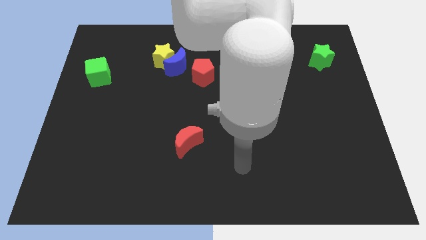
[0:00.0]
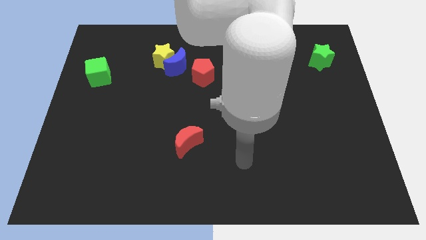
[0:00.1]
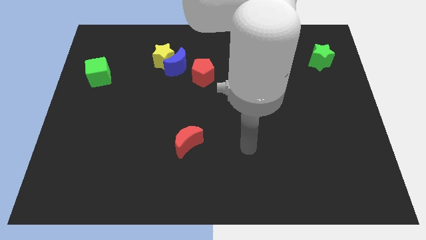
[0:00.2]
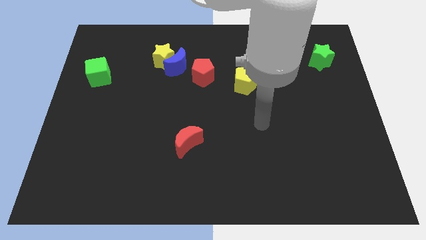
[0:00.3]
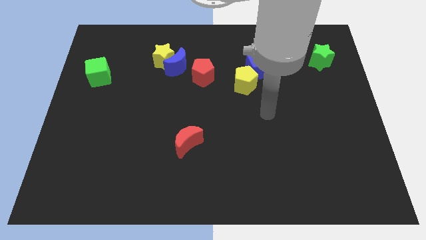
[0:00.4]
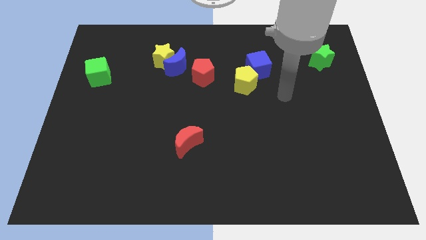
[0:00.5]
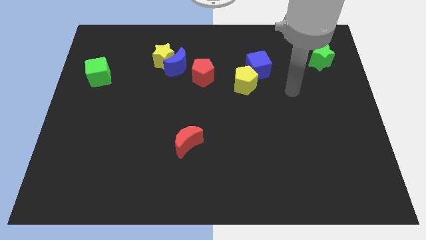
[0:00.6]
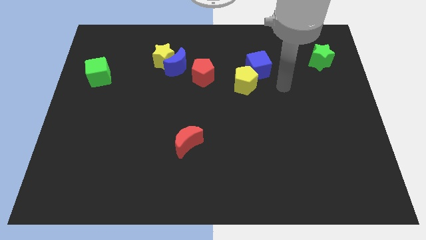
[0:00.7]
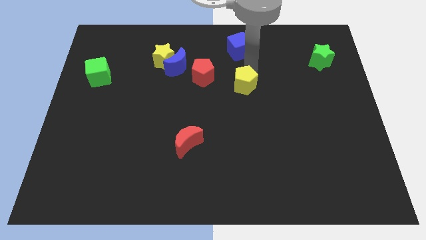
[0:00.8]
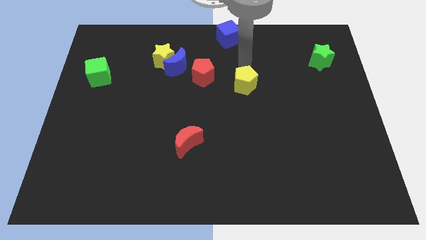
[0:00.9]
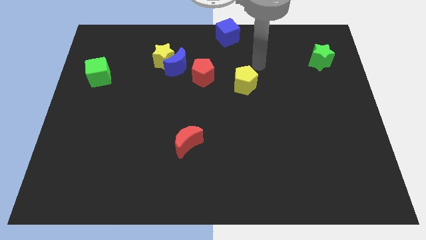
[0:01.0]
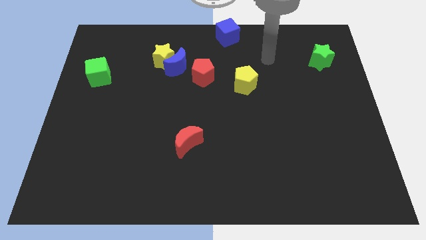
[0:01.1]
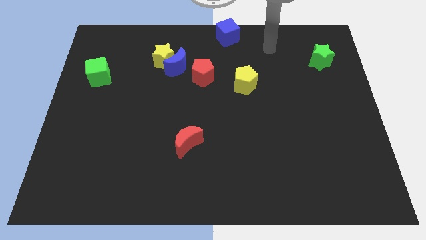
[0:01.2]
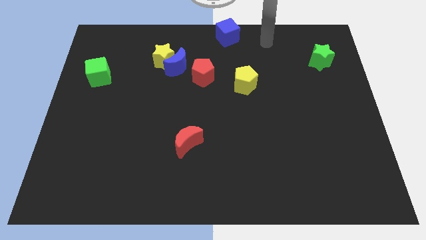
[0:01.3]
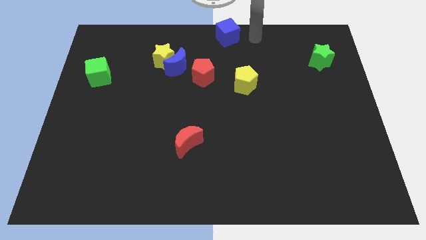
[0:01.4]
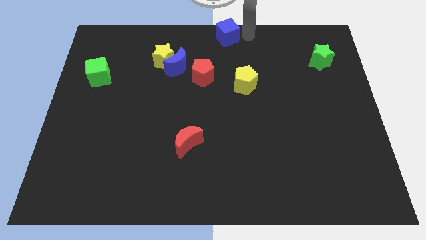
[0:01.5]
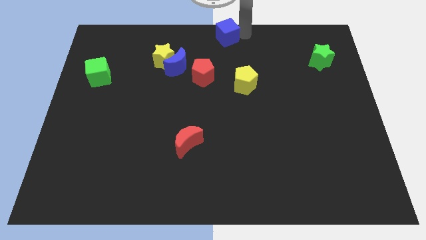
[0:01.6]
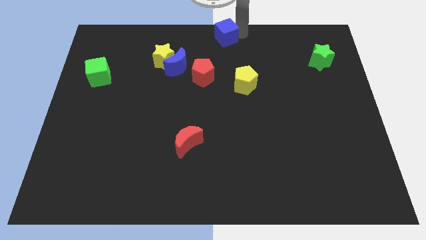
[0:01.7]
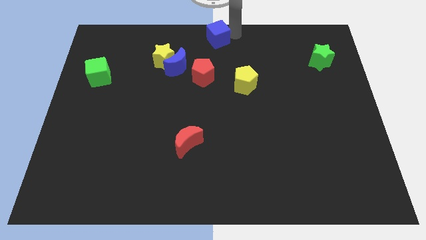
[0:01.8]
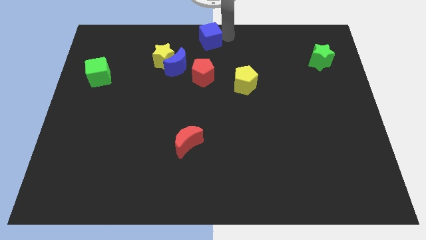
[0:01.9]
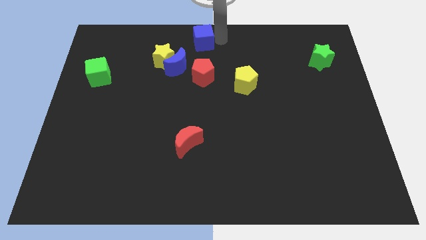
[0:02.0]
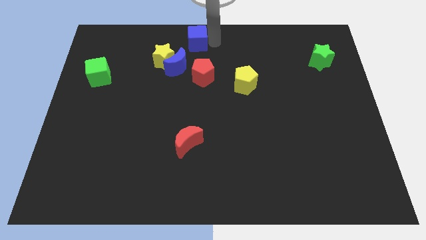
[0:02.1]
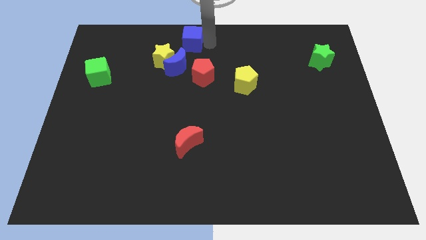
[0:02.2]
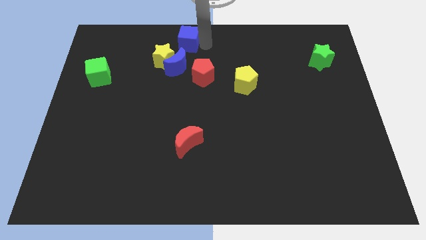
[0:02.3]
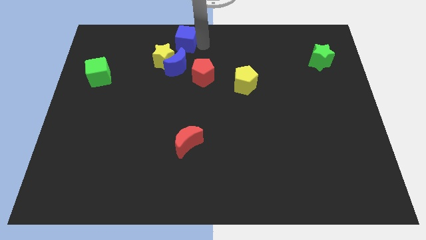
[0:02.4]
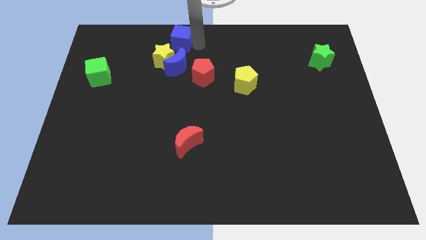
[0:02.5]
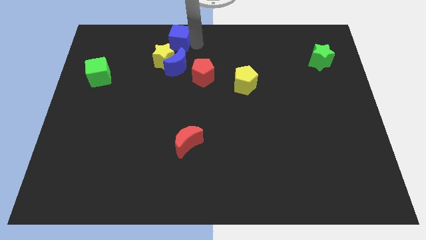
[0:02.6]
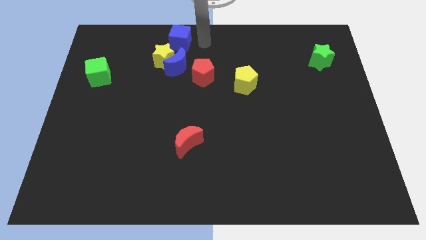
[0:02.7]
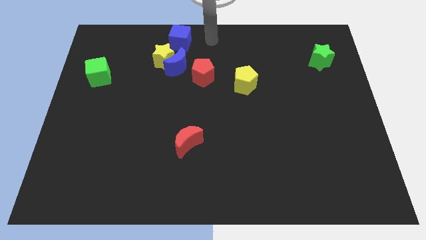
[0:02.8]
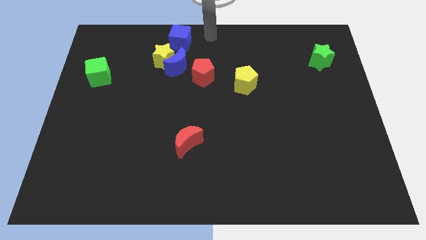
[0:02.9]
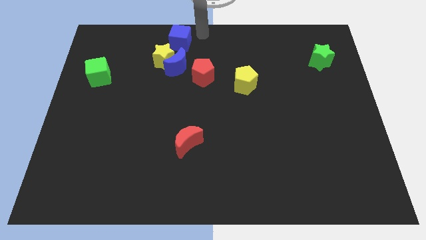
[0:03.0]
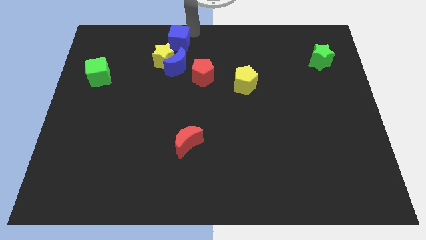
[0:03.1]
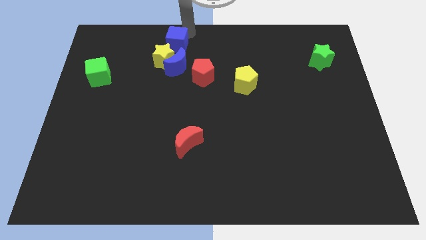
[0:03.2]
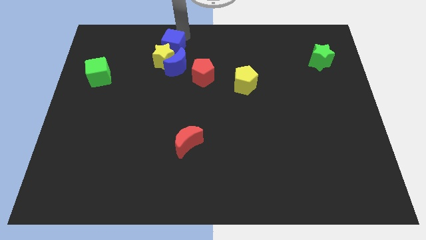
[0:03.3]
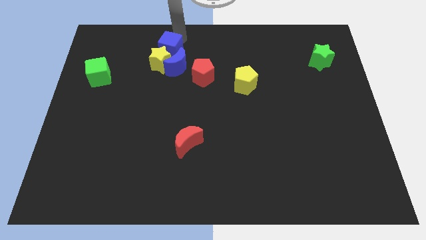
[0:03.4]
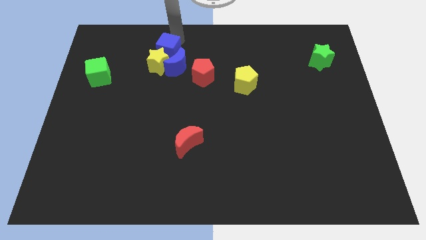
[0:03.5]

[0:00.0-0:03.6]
slide the blue cube close to the yellow star

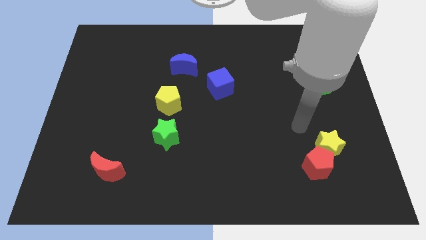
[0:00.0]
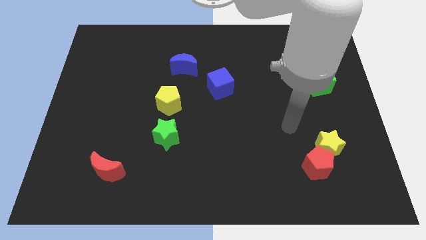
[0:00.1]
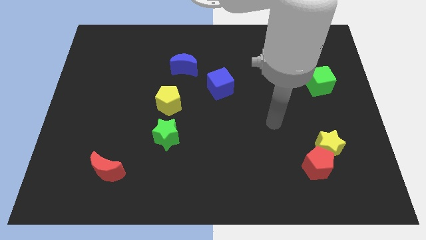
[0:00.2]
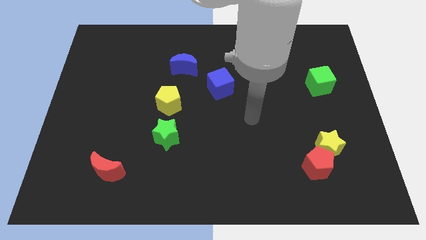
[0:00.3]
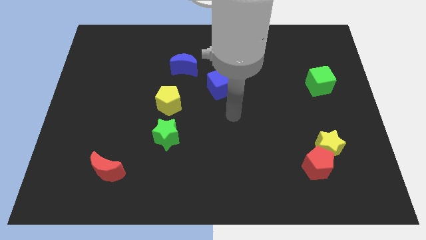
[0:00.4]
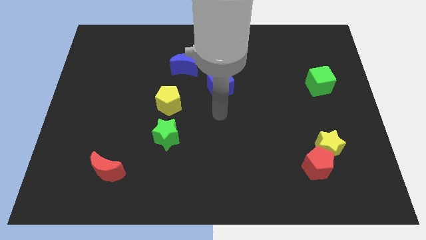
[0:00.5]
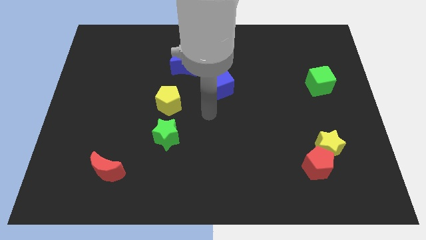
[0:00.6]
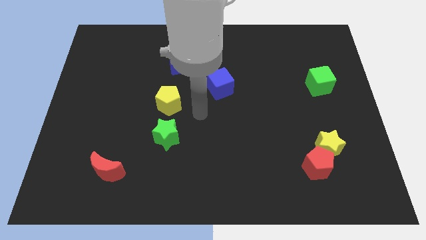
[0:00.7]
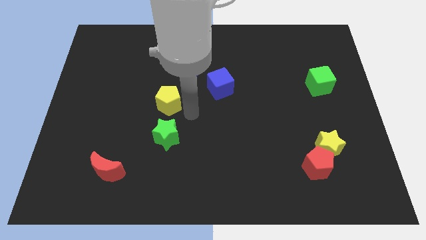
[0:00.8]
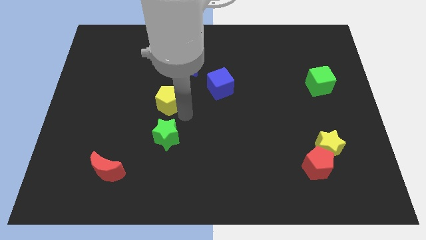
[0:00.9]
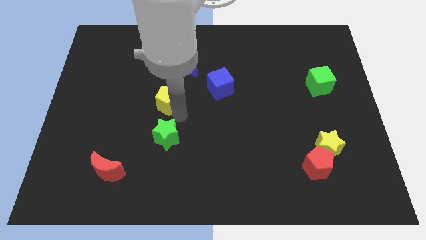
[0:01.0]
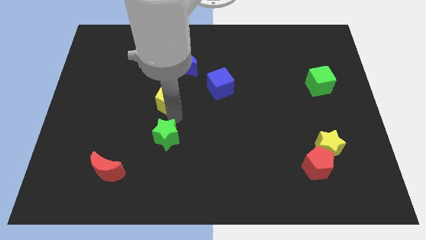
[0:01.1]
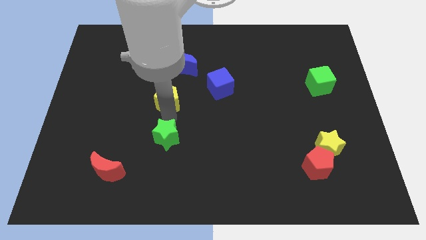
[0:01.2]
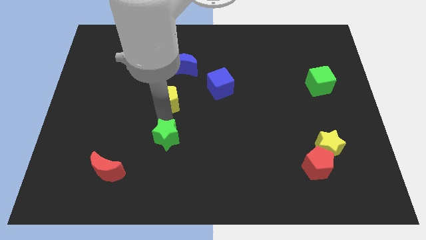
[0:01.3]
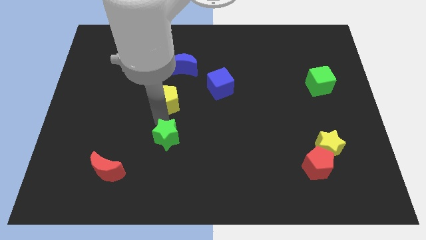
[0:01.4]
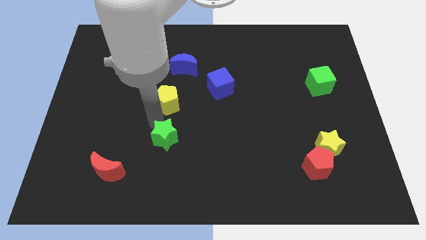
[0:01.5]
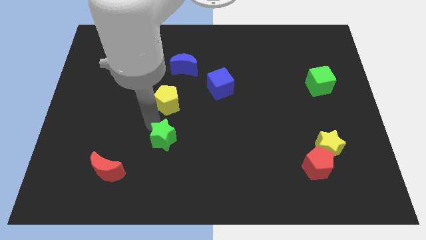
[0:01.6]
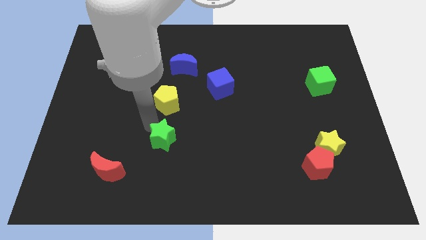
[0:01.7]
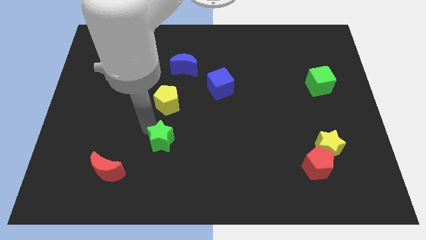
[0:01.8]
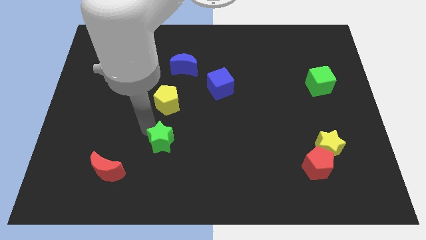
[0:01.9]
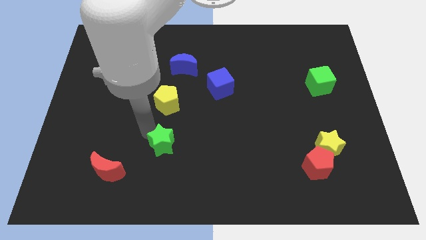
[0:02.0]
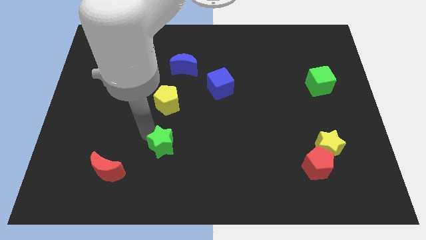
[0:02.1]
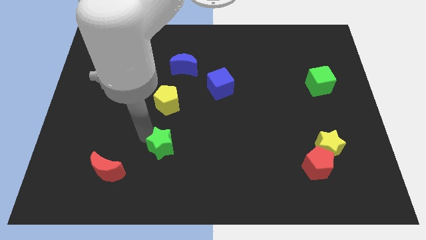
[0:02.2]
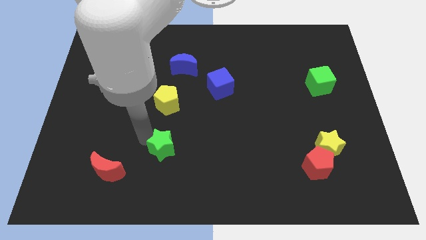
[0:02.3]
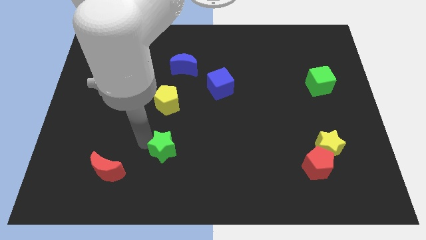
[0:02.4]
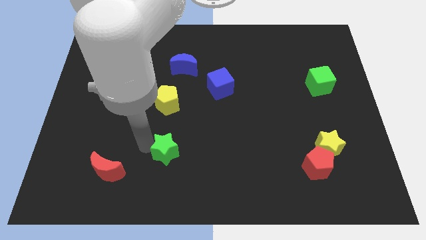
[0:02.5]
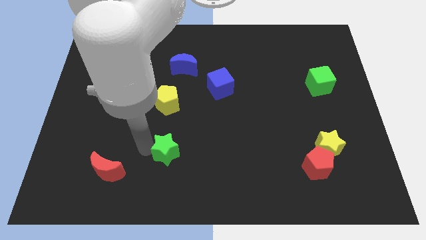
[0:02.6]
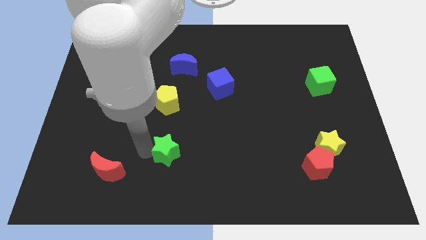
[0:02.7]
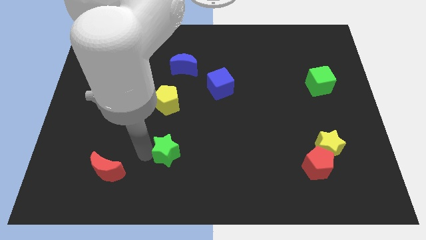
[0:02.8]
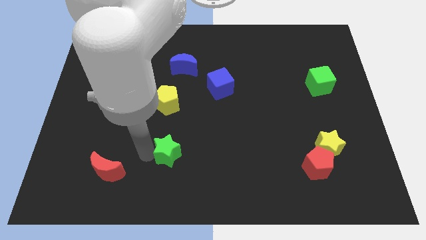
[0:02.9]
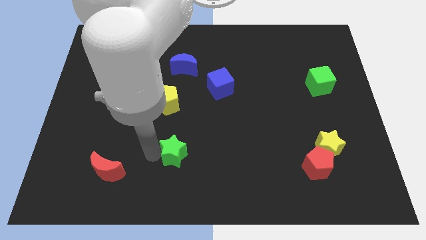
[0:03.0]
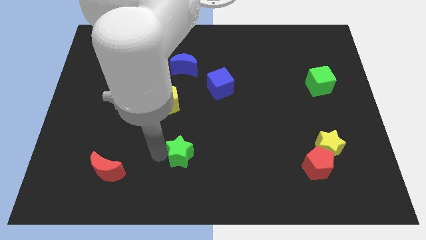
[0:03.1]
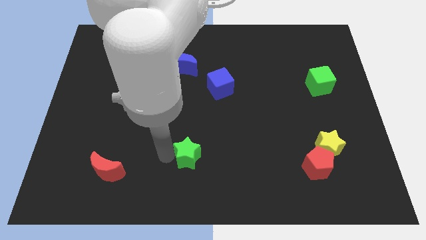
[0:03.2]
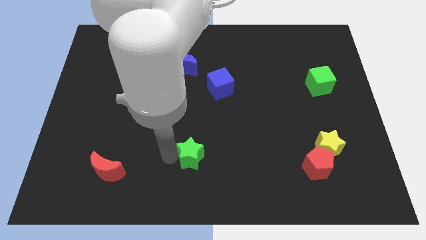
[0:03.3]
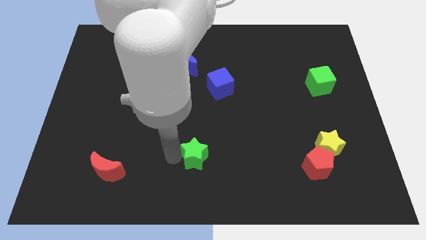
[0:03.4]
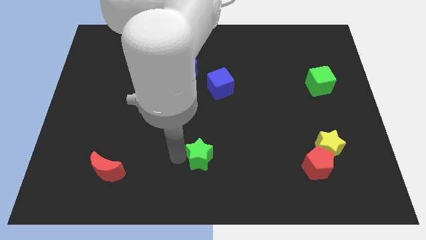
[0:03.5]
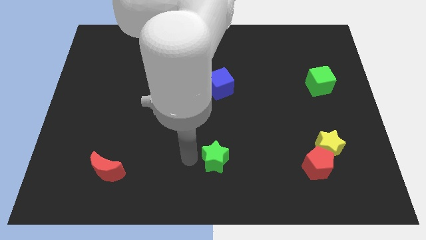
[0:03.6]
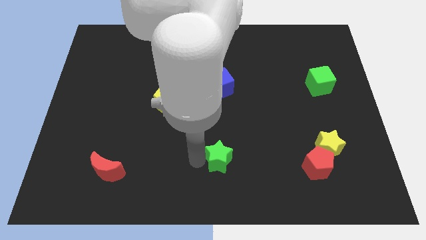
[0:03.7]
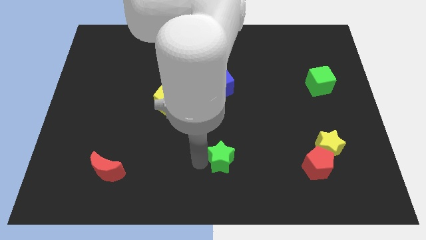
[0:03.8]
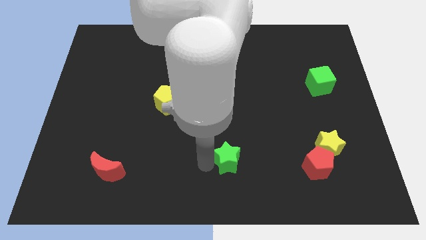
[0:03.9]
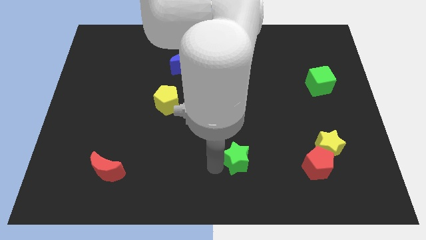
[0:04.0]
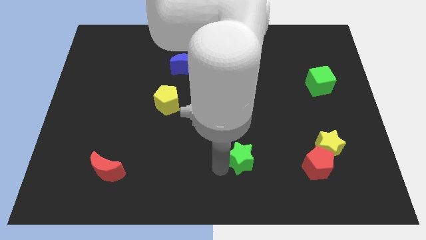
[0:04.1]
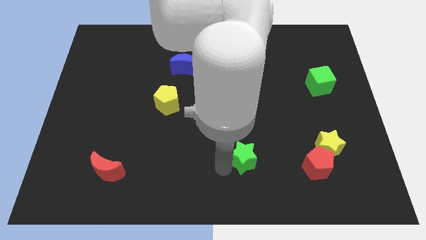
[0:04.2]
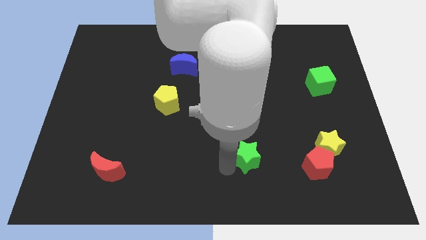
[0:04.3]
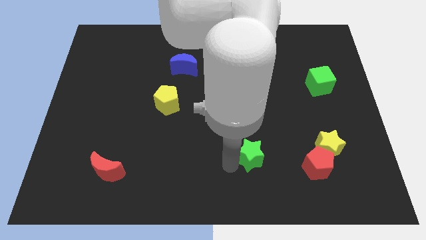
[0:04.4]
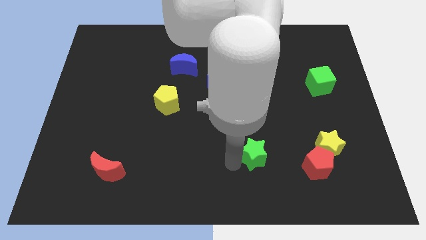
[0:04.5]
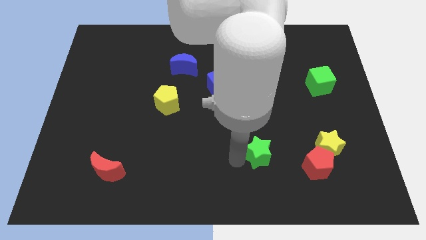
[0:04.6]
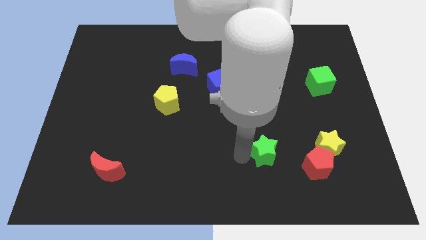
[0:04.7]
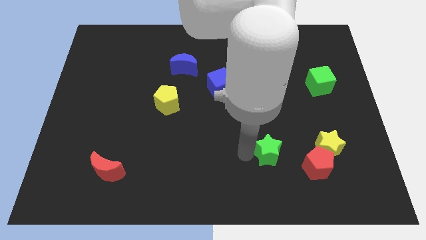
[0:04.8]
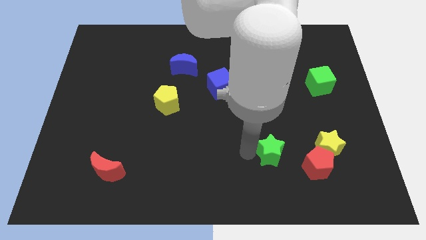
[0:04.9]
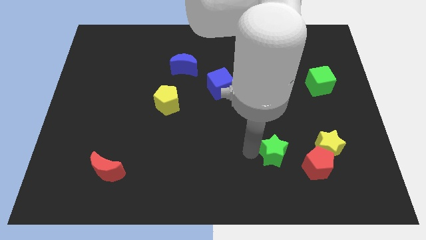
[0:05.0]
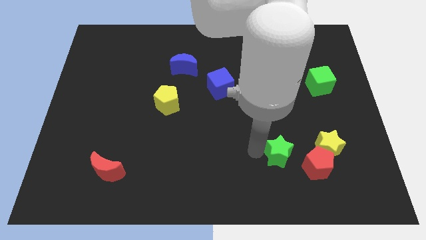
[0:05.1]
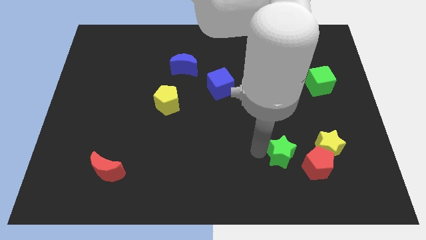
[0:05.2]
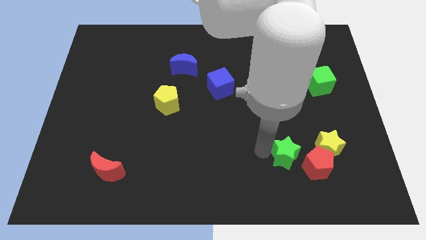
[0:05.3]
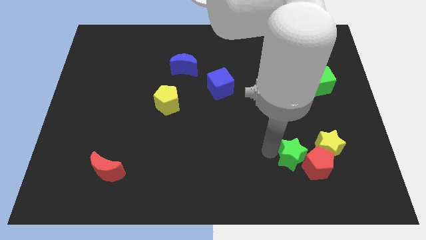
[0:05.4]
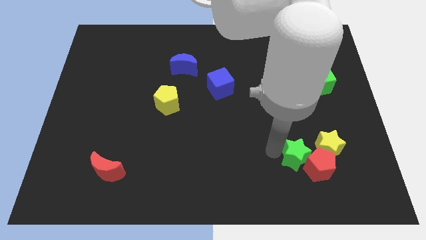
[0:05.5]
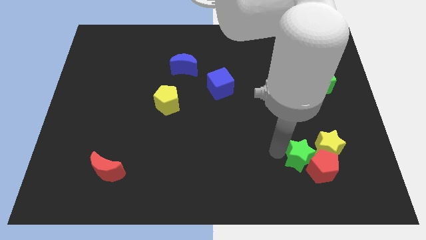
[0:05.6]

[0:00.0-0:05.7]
push the green star to the red pentagon
